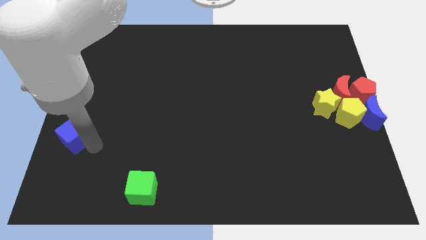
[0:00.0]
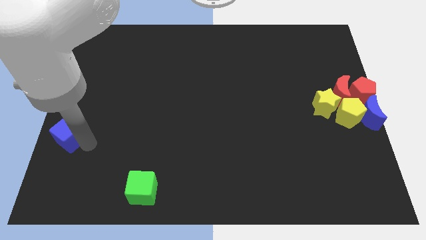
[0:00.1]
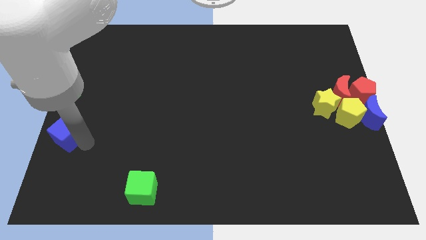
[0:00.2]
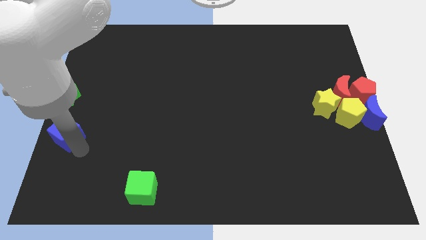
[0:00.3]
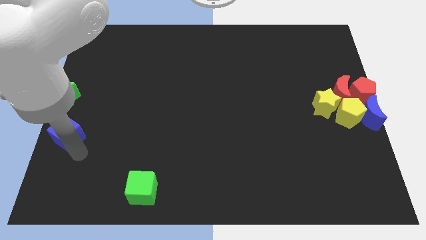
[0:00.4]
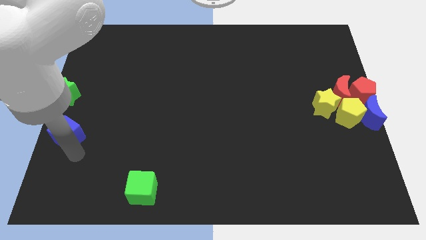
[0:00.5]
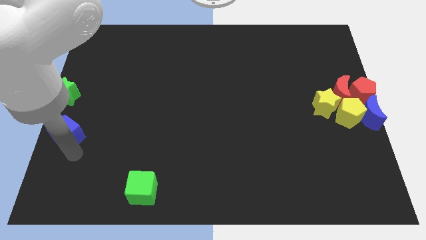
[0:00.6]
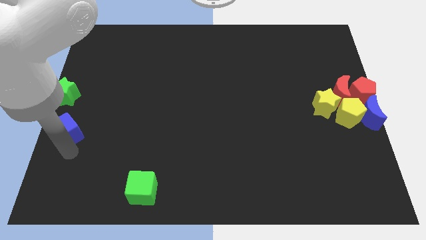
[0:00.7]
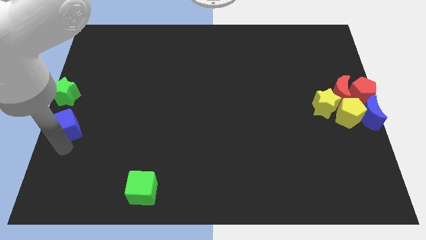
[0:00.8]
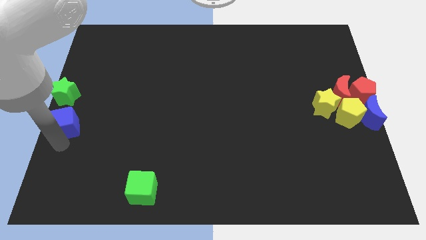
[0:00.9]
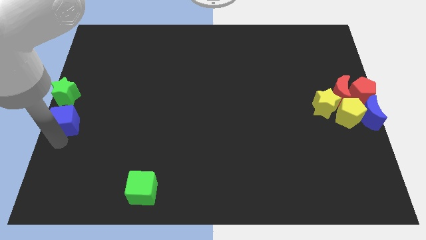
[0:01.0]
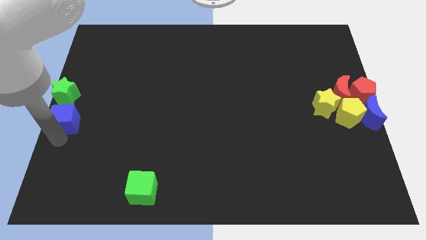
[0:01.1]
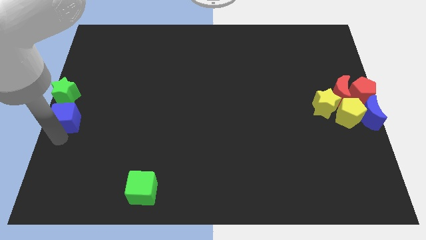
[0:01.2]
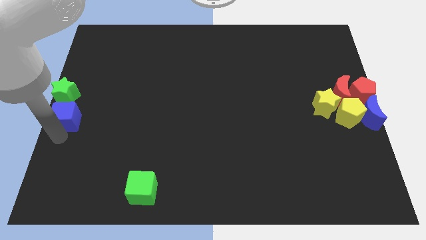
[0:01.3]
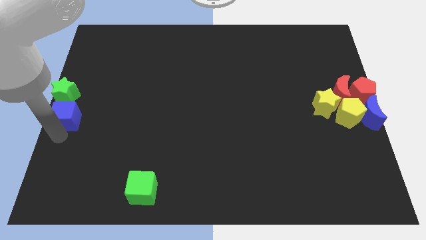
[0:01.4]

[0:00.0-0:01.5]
push the blue cube near to the green star

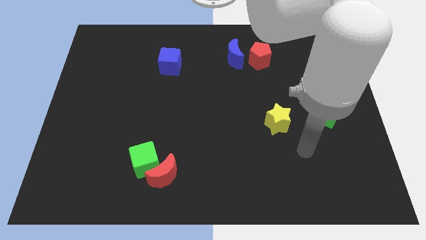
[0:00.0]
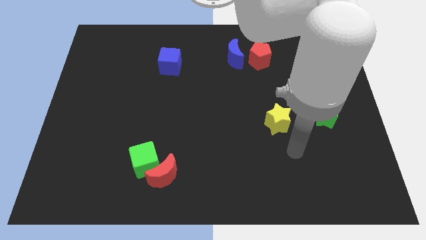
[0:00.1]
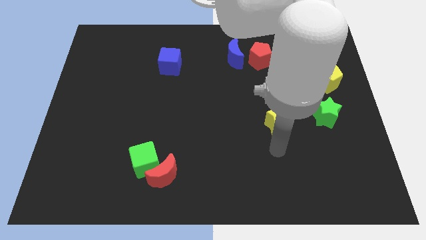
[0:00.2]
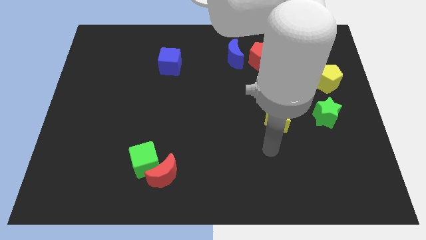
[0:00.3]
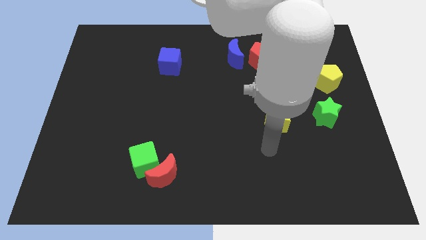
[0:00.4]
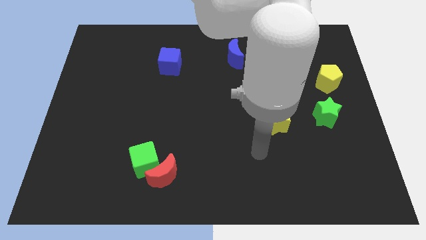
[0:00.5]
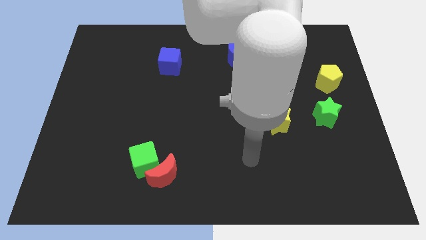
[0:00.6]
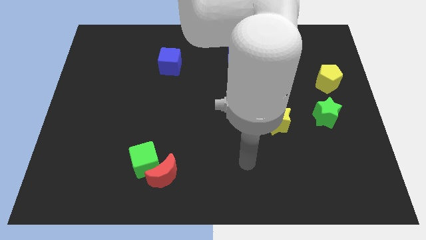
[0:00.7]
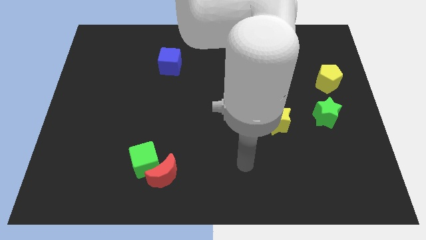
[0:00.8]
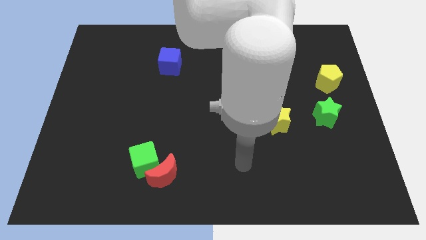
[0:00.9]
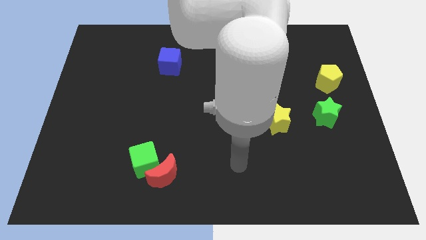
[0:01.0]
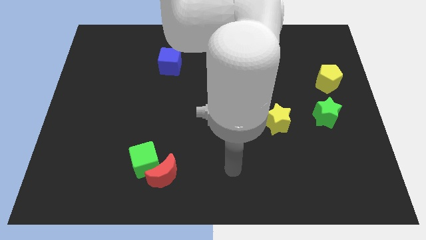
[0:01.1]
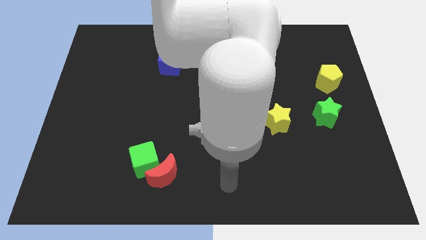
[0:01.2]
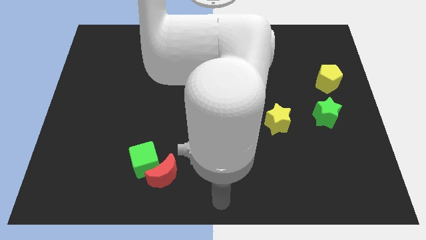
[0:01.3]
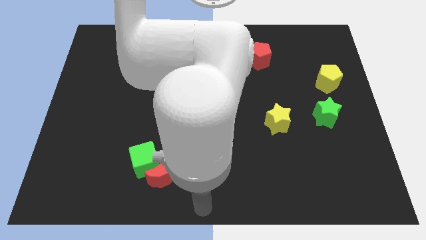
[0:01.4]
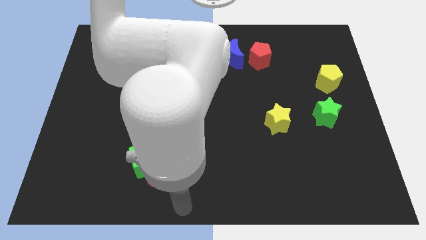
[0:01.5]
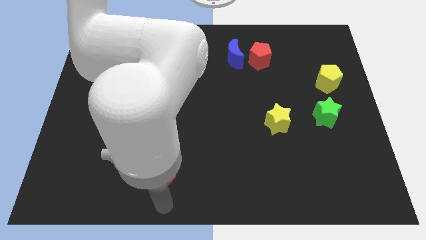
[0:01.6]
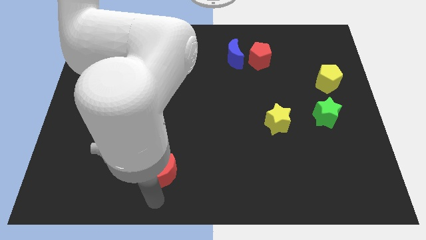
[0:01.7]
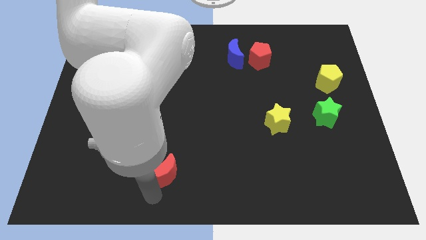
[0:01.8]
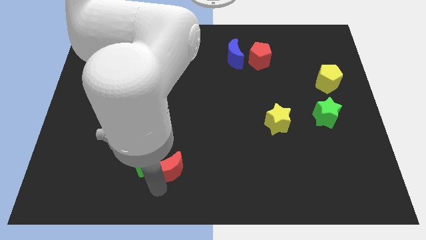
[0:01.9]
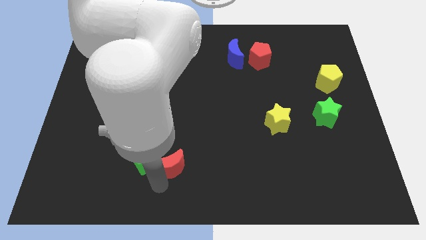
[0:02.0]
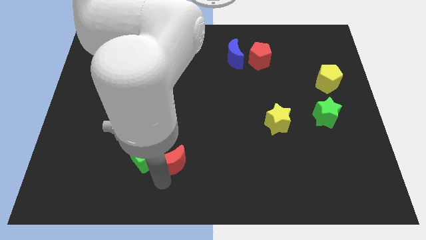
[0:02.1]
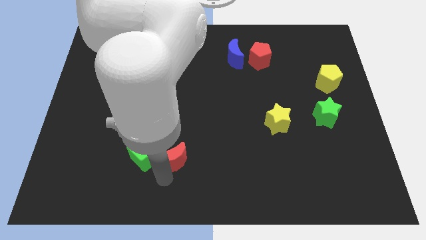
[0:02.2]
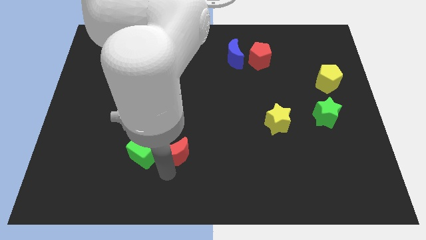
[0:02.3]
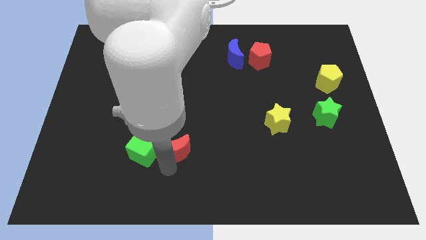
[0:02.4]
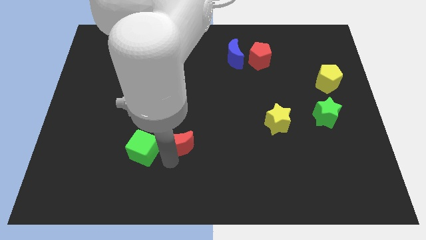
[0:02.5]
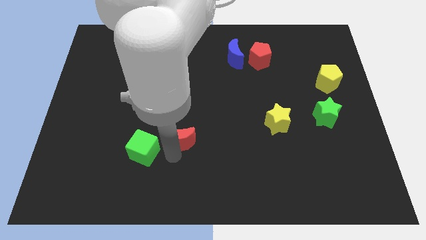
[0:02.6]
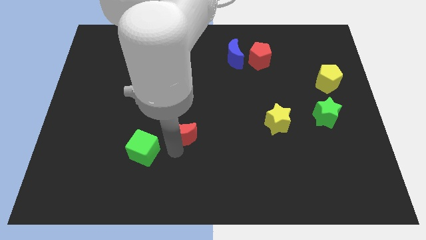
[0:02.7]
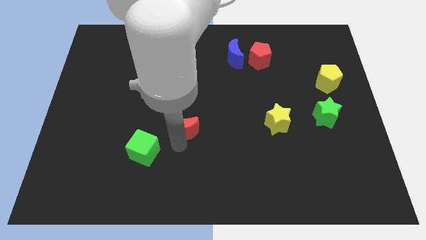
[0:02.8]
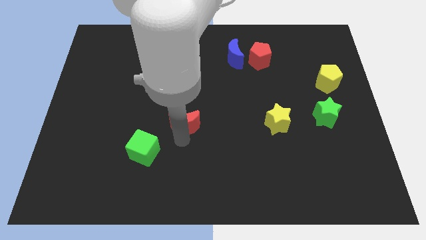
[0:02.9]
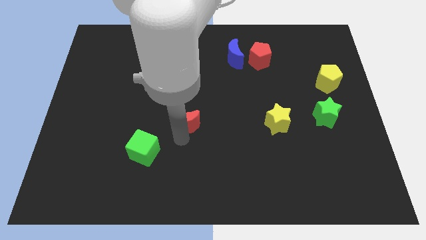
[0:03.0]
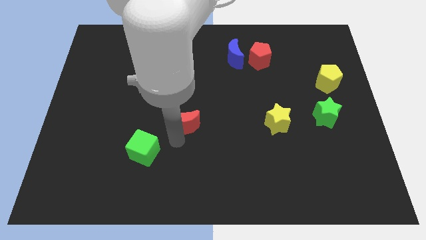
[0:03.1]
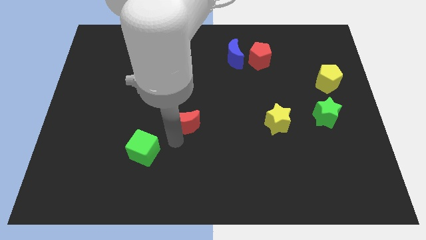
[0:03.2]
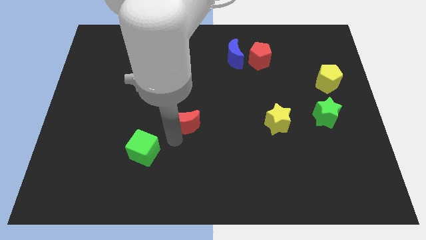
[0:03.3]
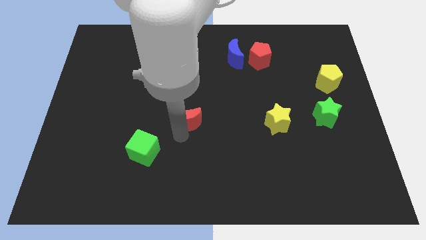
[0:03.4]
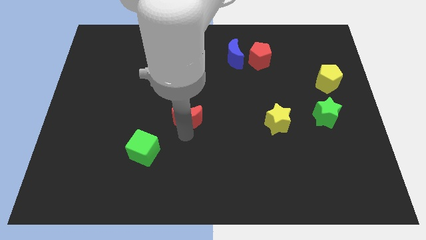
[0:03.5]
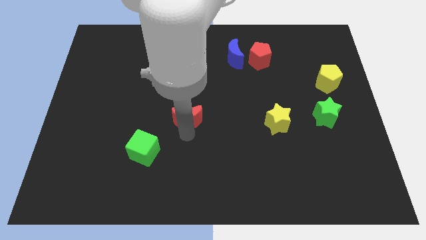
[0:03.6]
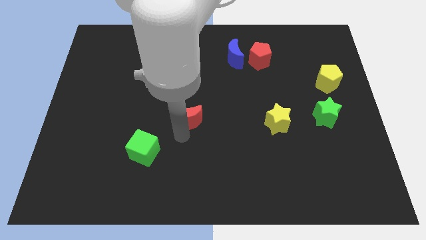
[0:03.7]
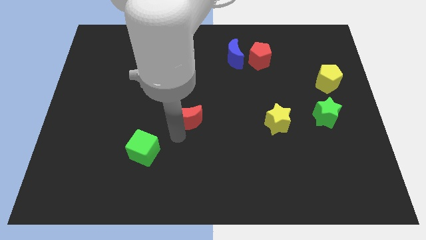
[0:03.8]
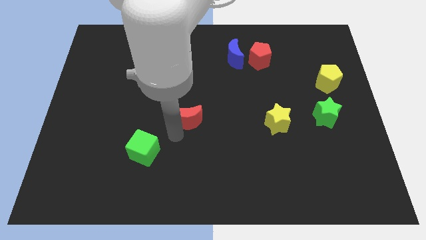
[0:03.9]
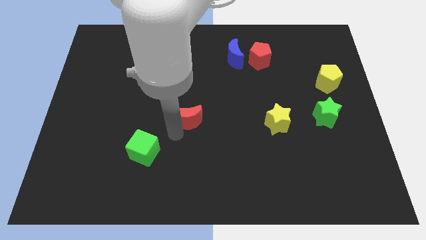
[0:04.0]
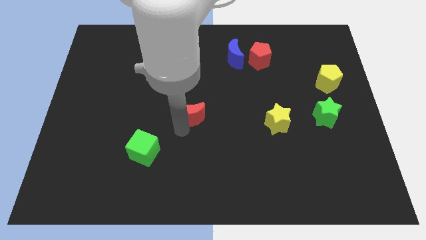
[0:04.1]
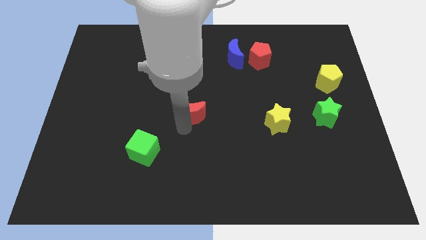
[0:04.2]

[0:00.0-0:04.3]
move the red crescent away from the green cube

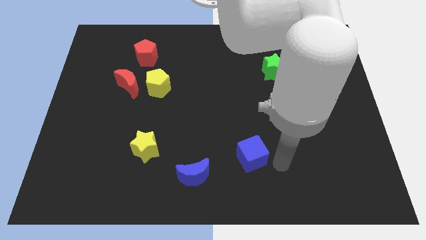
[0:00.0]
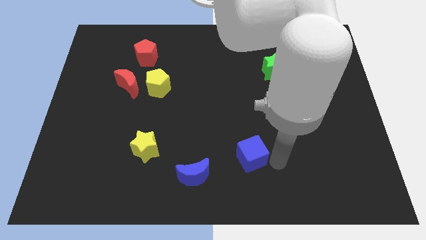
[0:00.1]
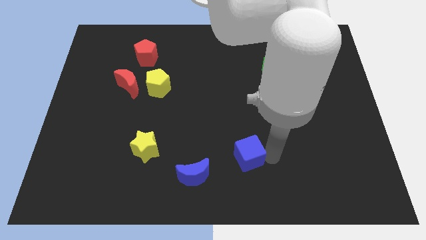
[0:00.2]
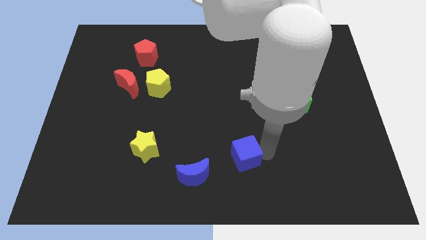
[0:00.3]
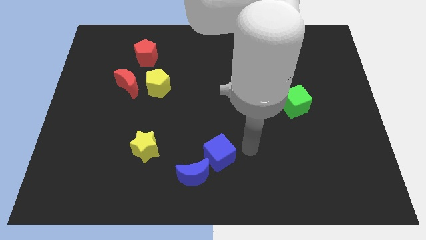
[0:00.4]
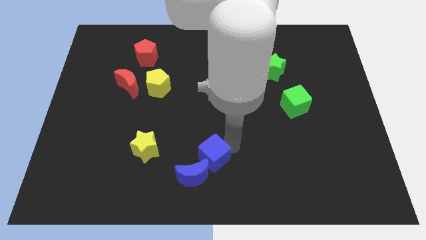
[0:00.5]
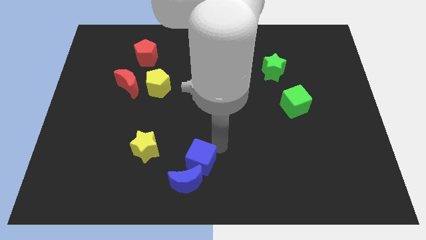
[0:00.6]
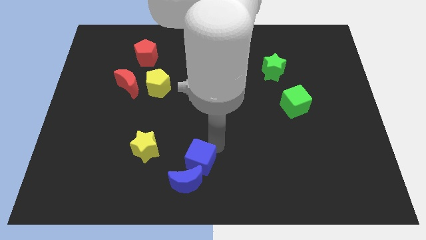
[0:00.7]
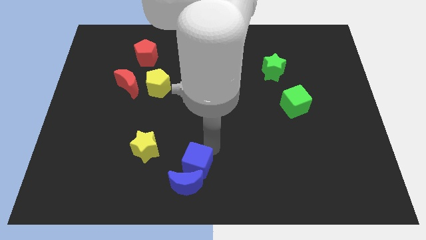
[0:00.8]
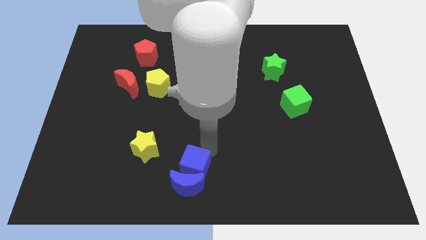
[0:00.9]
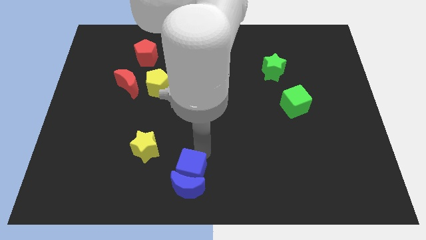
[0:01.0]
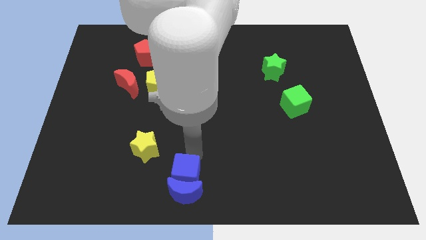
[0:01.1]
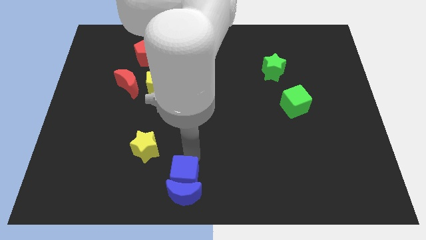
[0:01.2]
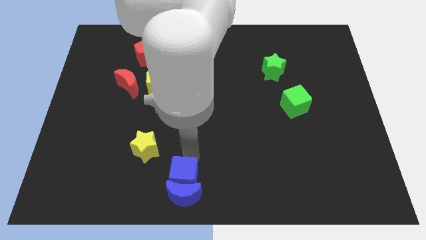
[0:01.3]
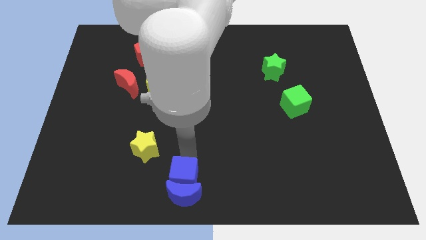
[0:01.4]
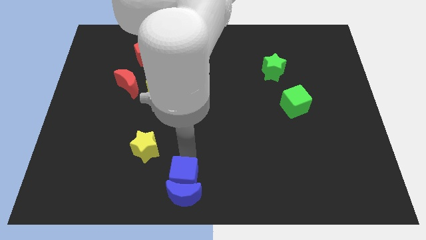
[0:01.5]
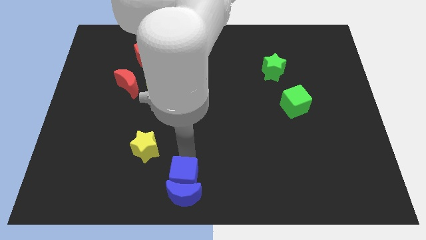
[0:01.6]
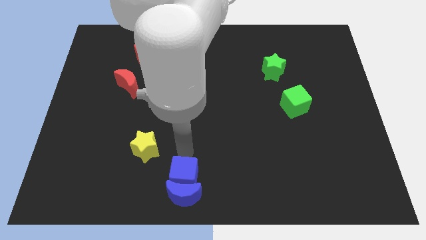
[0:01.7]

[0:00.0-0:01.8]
push the blue cube to the top side of the blue moon

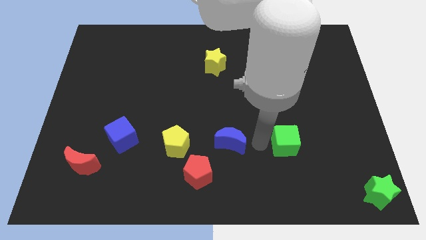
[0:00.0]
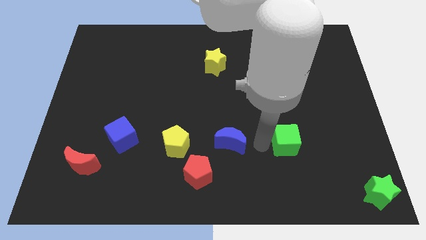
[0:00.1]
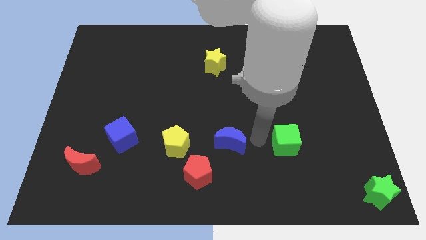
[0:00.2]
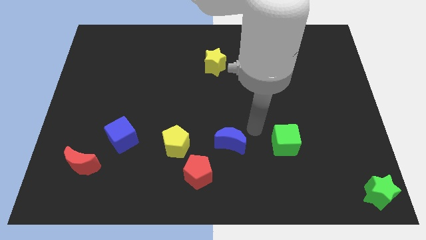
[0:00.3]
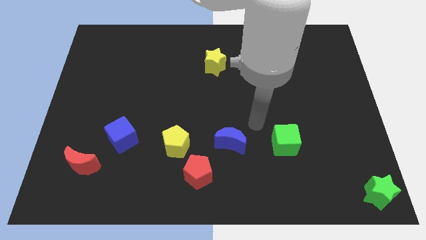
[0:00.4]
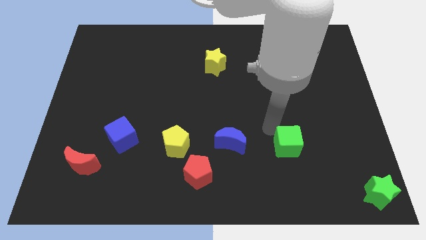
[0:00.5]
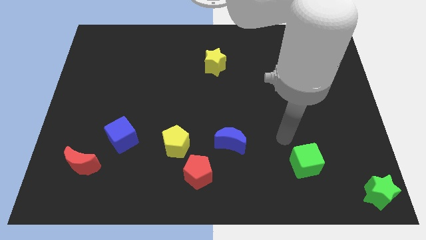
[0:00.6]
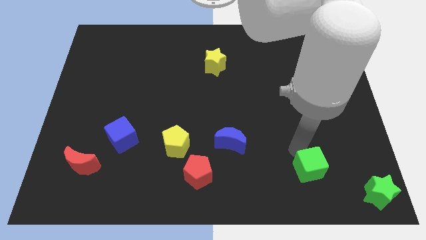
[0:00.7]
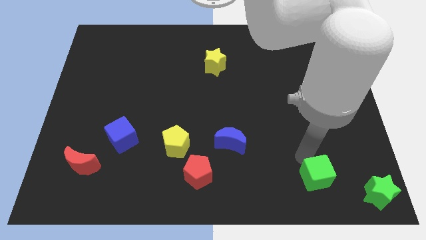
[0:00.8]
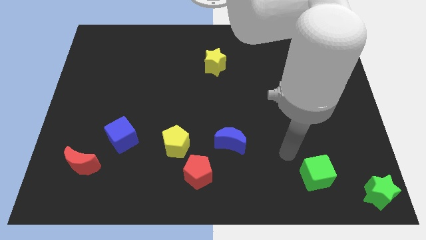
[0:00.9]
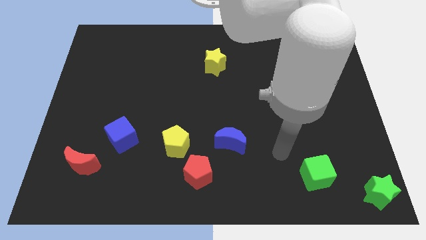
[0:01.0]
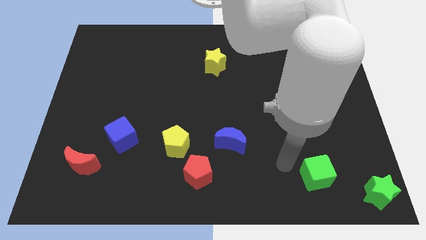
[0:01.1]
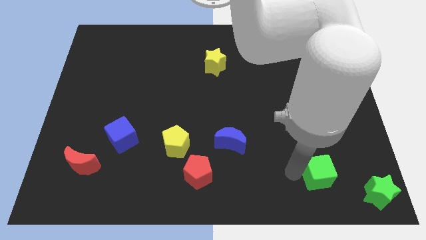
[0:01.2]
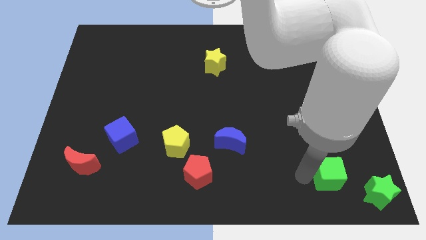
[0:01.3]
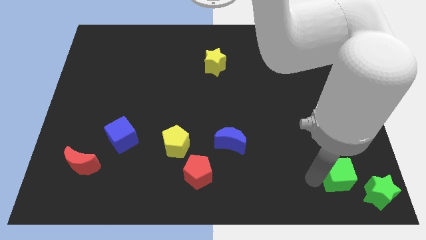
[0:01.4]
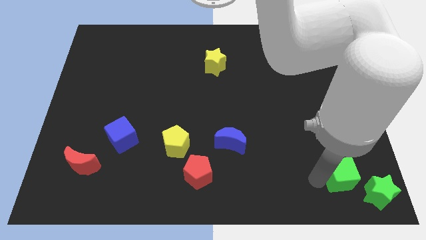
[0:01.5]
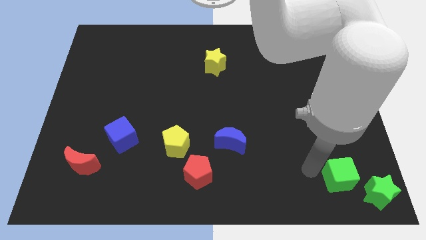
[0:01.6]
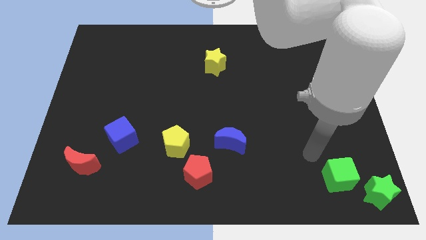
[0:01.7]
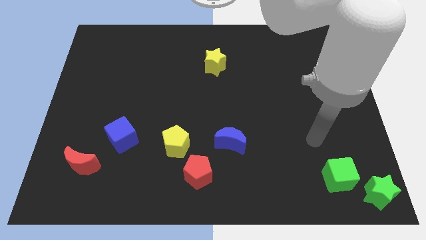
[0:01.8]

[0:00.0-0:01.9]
push the green cube towards the green star at the bottom right of the board
